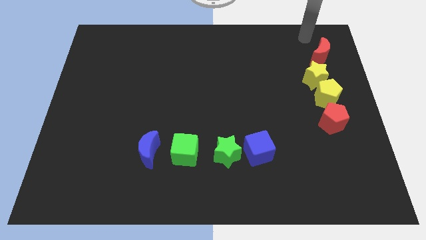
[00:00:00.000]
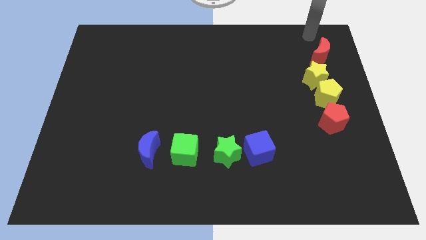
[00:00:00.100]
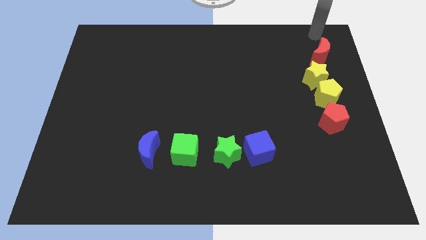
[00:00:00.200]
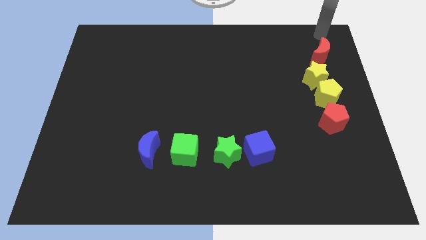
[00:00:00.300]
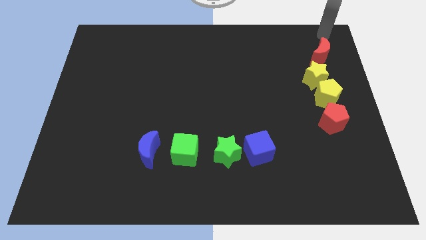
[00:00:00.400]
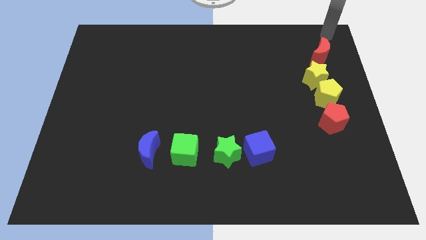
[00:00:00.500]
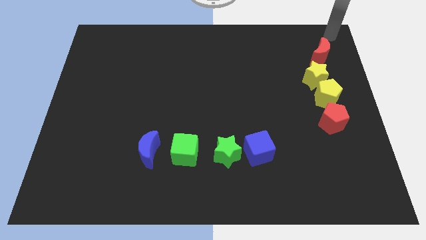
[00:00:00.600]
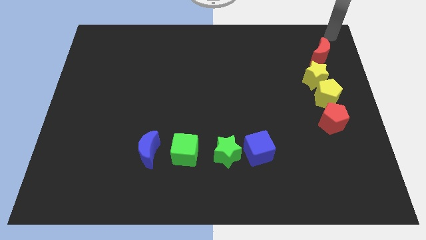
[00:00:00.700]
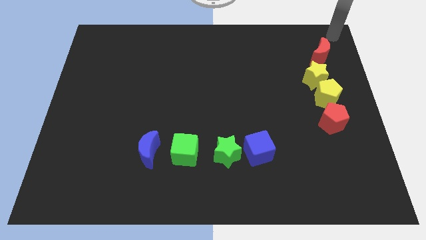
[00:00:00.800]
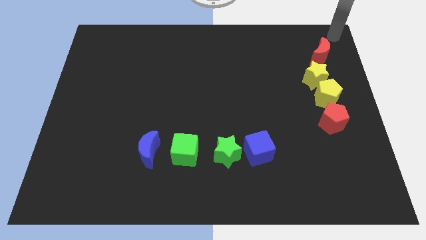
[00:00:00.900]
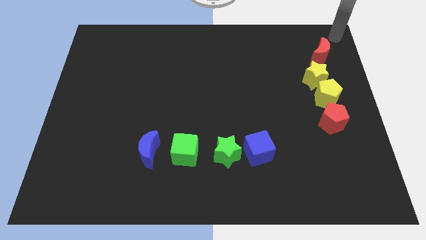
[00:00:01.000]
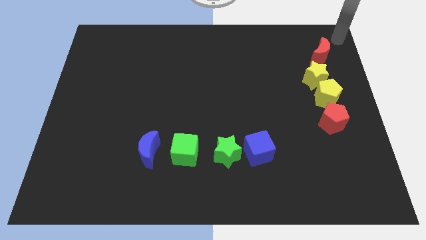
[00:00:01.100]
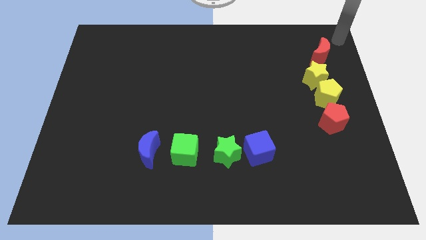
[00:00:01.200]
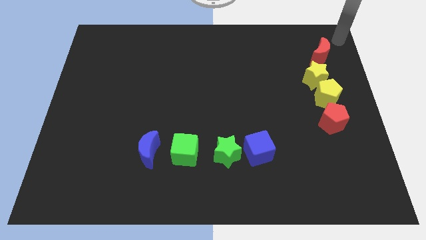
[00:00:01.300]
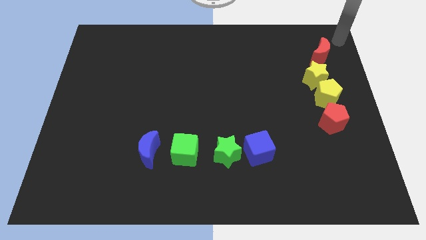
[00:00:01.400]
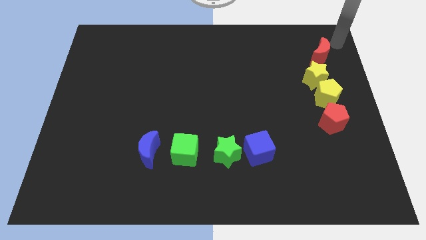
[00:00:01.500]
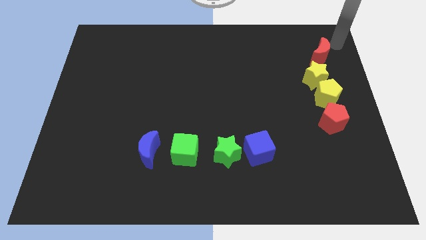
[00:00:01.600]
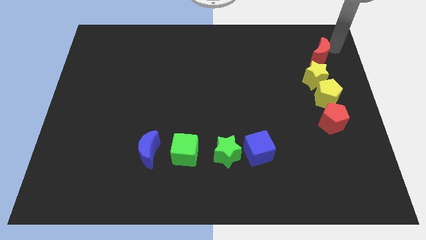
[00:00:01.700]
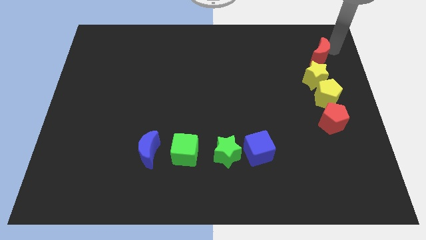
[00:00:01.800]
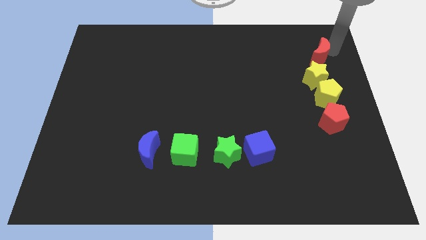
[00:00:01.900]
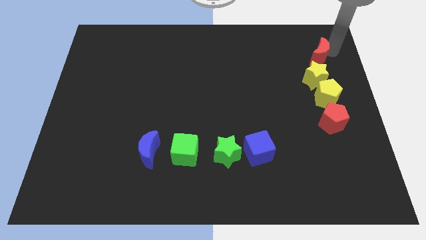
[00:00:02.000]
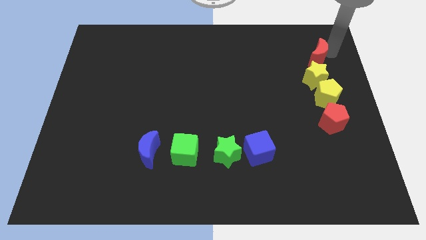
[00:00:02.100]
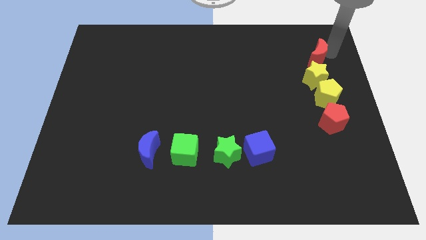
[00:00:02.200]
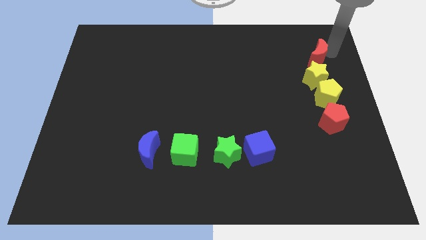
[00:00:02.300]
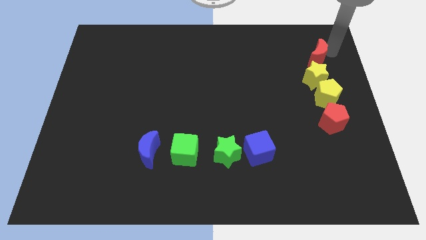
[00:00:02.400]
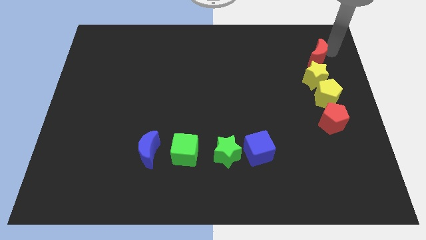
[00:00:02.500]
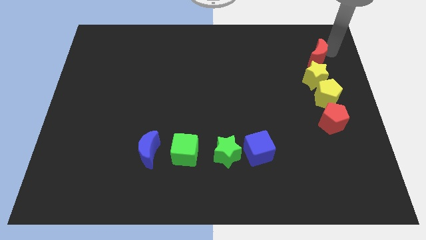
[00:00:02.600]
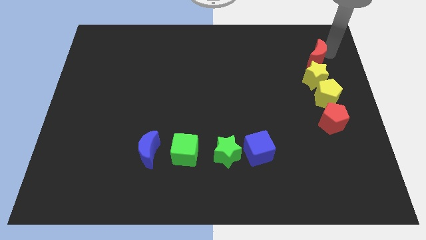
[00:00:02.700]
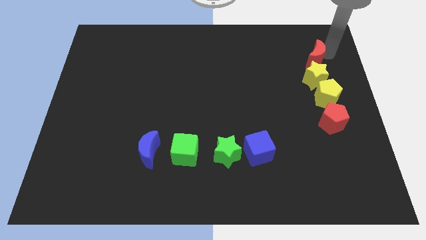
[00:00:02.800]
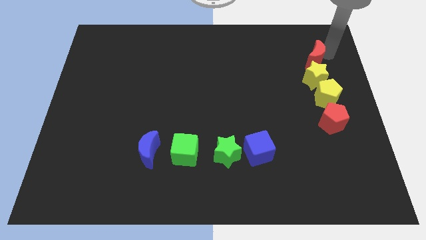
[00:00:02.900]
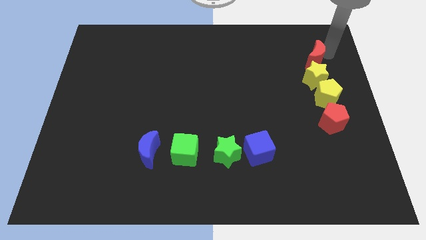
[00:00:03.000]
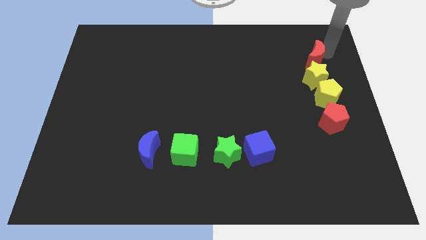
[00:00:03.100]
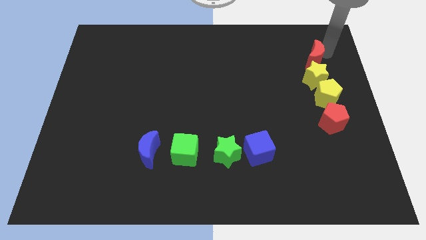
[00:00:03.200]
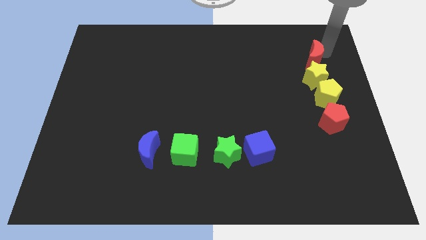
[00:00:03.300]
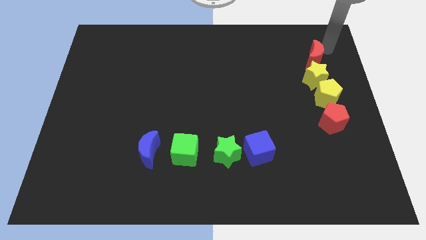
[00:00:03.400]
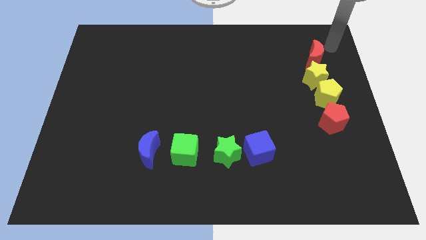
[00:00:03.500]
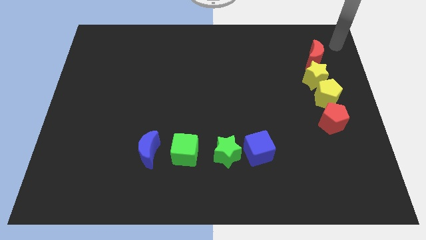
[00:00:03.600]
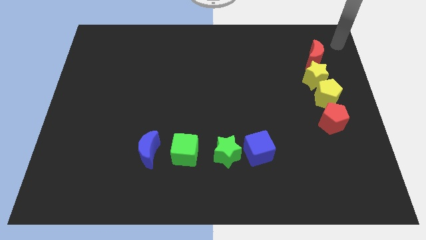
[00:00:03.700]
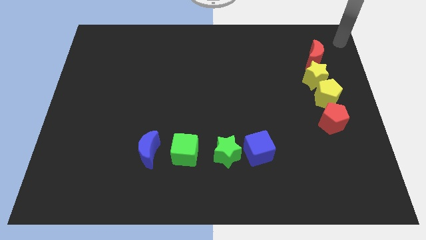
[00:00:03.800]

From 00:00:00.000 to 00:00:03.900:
slightly push the red moon downwards of the board

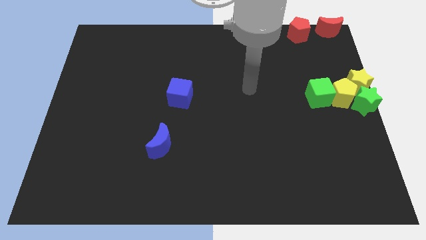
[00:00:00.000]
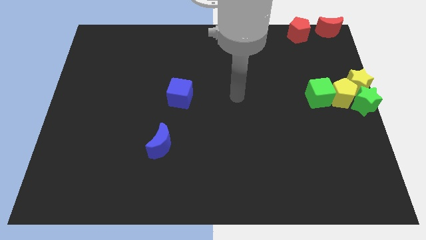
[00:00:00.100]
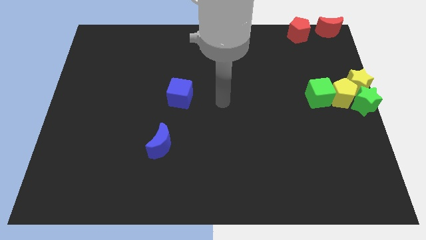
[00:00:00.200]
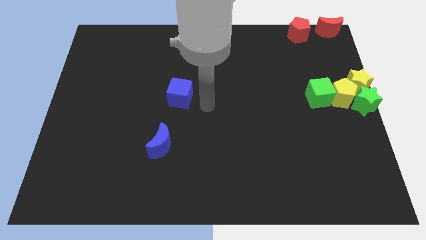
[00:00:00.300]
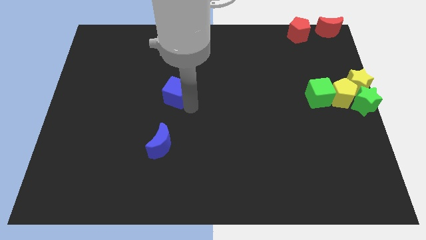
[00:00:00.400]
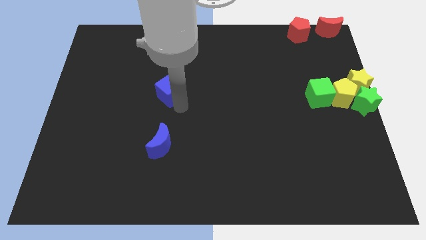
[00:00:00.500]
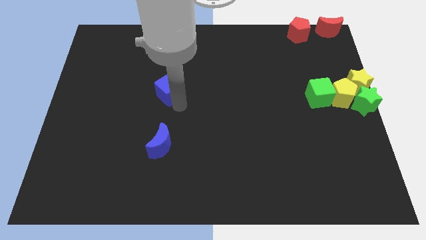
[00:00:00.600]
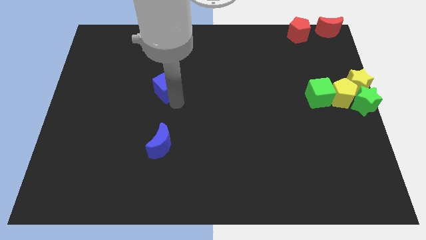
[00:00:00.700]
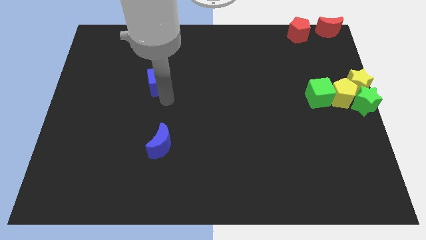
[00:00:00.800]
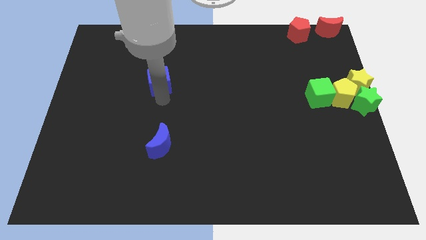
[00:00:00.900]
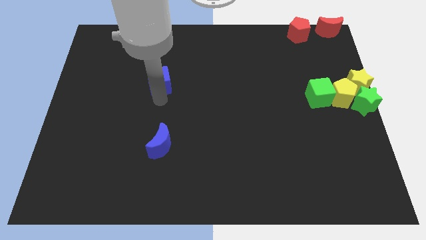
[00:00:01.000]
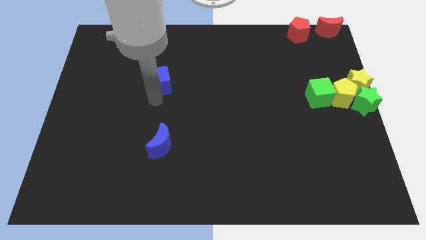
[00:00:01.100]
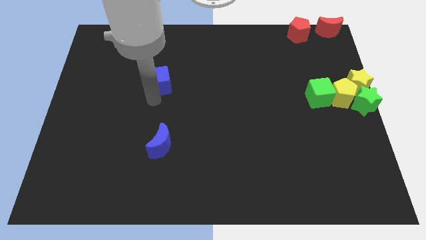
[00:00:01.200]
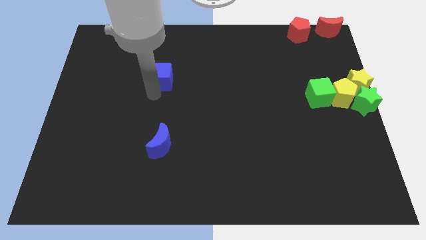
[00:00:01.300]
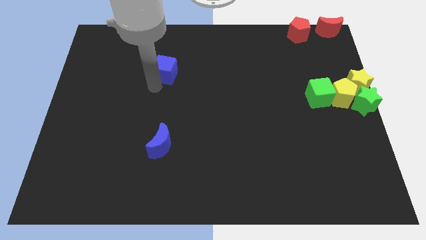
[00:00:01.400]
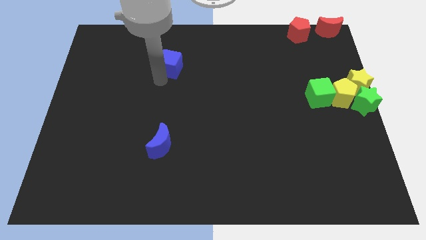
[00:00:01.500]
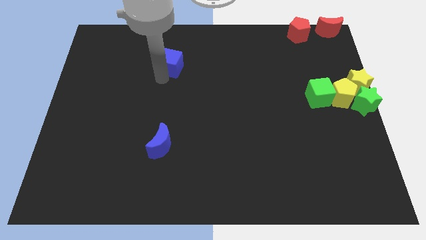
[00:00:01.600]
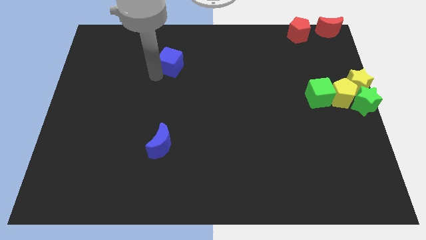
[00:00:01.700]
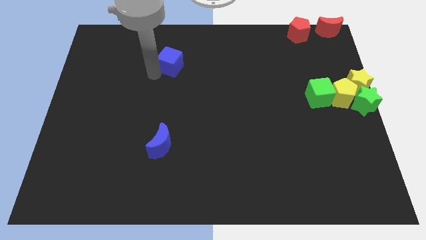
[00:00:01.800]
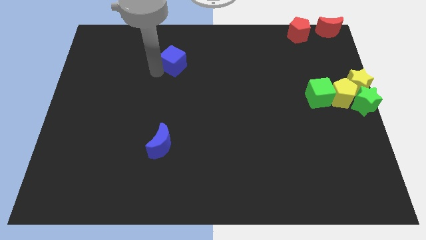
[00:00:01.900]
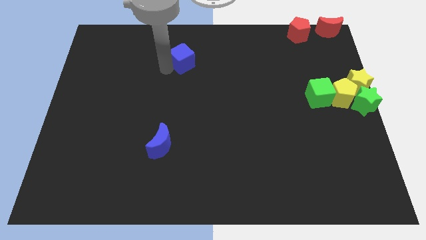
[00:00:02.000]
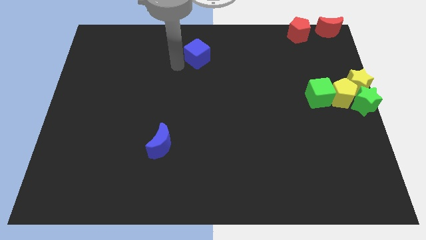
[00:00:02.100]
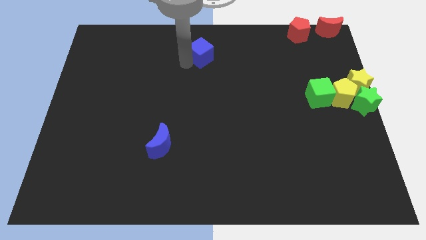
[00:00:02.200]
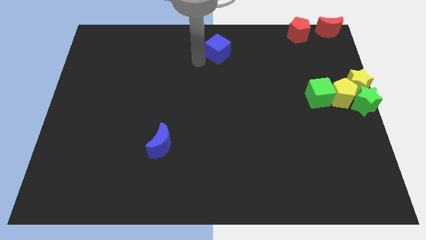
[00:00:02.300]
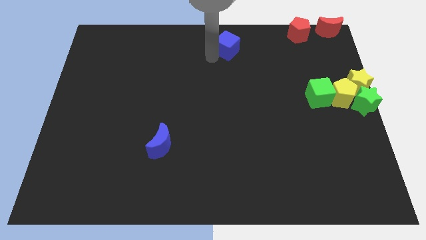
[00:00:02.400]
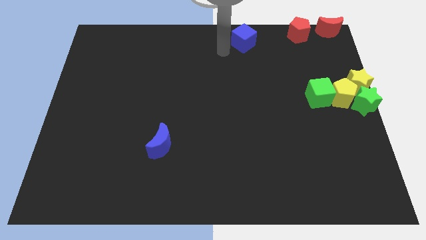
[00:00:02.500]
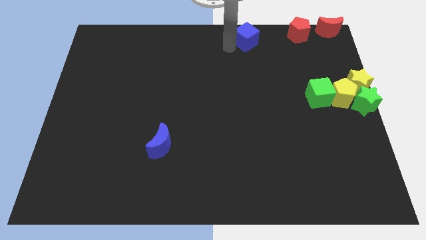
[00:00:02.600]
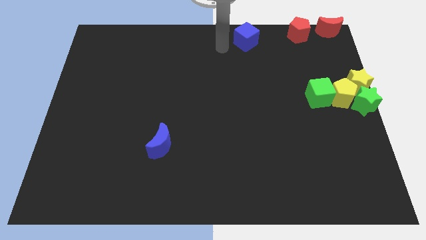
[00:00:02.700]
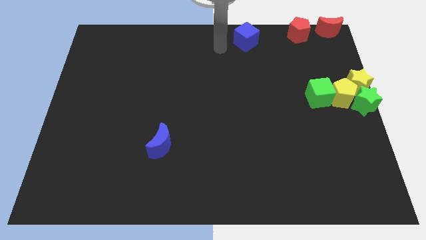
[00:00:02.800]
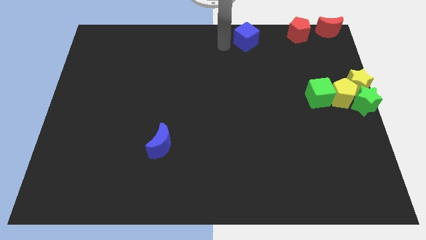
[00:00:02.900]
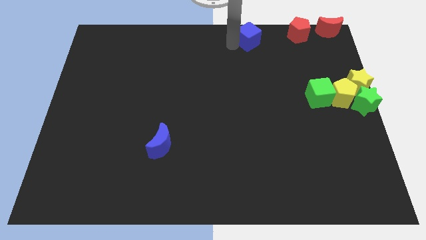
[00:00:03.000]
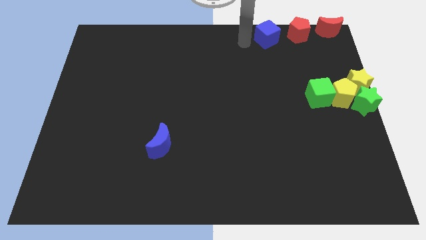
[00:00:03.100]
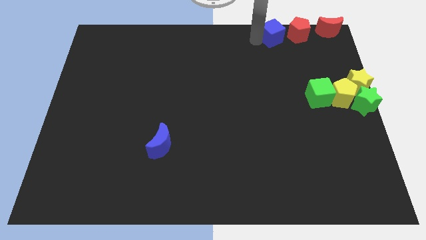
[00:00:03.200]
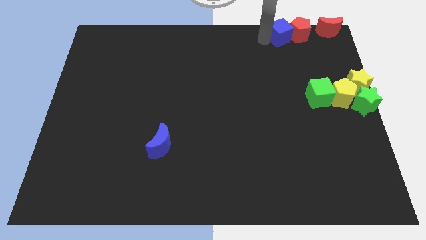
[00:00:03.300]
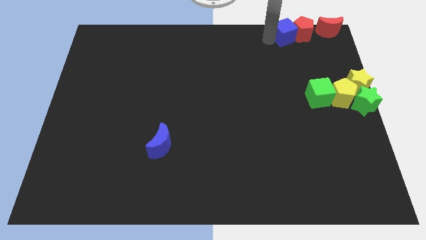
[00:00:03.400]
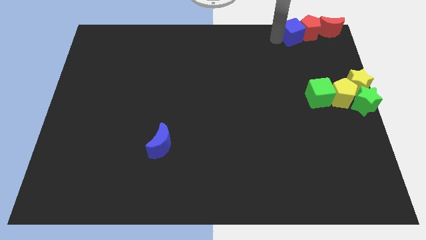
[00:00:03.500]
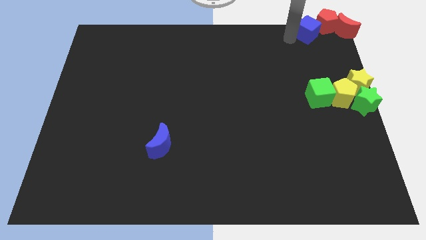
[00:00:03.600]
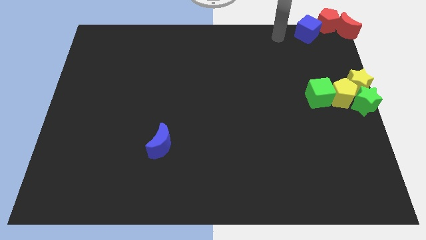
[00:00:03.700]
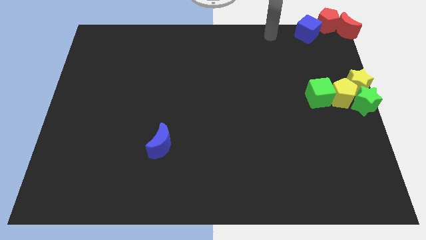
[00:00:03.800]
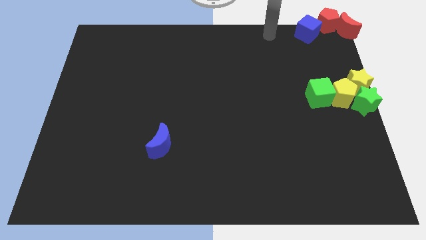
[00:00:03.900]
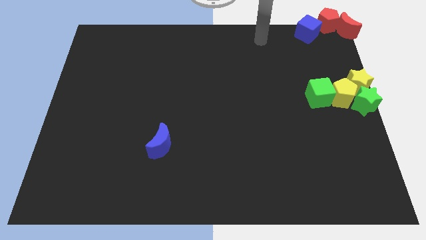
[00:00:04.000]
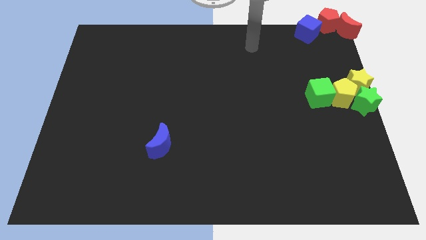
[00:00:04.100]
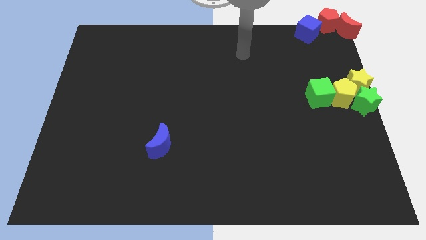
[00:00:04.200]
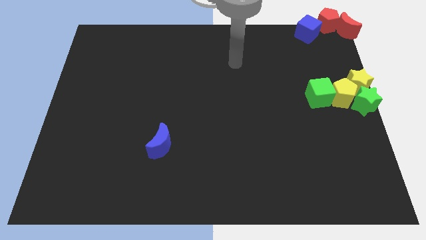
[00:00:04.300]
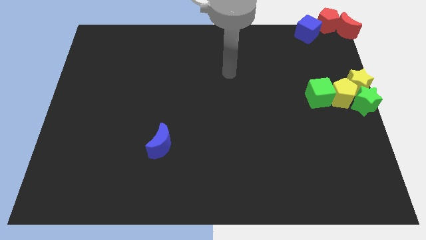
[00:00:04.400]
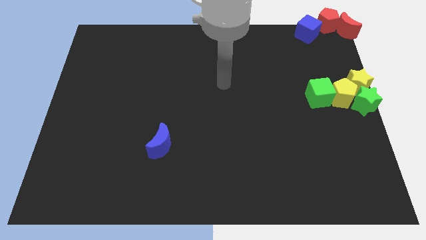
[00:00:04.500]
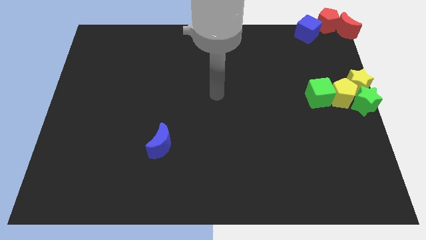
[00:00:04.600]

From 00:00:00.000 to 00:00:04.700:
place the blue cube left to the red pentagon

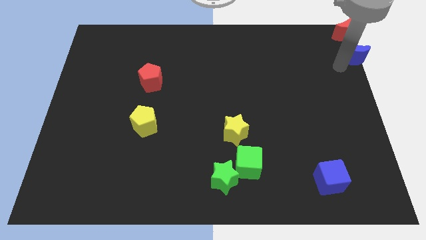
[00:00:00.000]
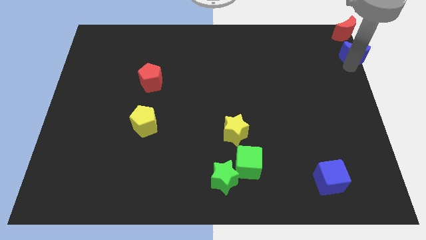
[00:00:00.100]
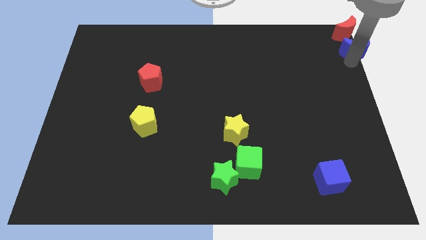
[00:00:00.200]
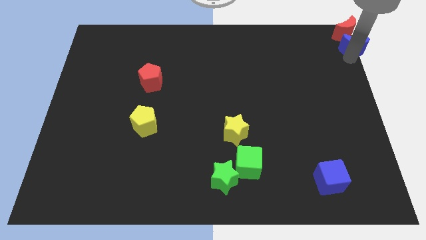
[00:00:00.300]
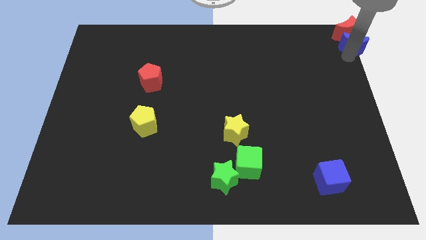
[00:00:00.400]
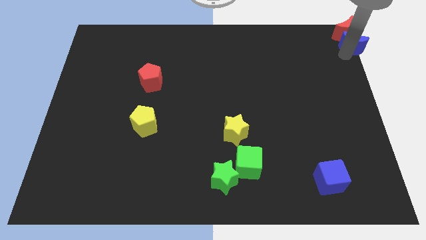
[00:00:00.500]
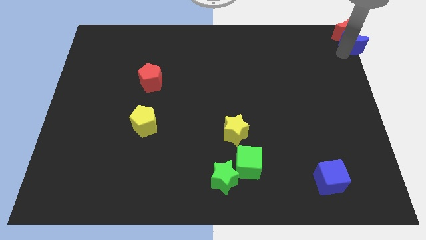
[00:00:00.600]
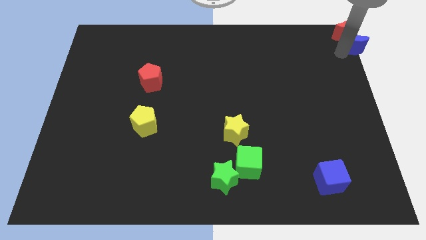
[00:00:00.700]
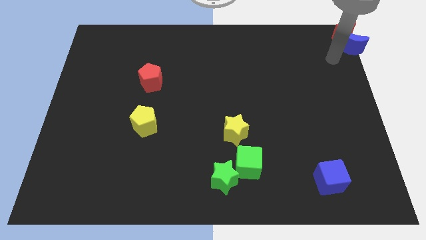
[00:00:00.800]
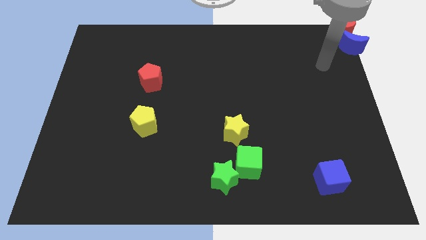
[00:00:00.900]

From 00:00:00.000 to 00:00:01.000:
push blue moon towards red moon
